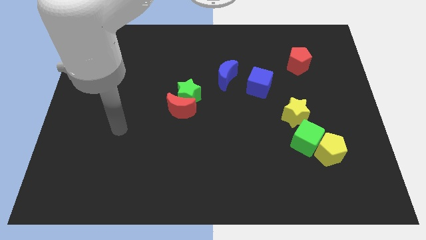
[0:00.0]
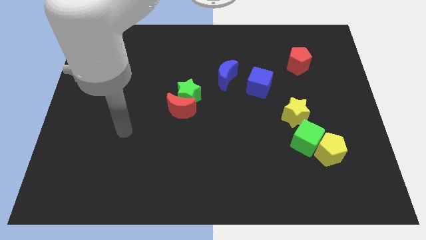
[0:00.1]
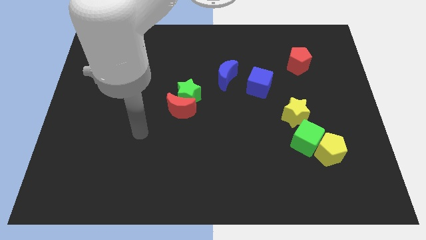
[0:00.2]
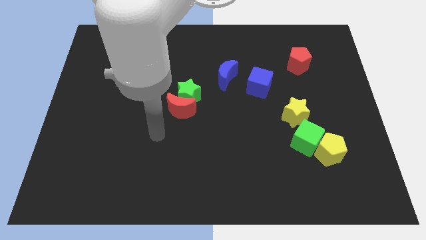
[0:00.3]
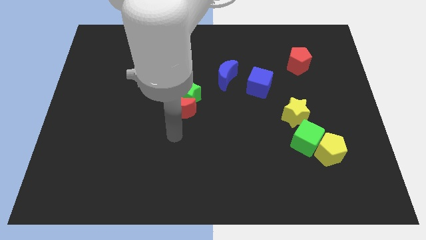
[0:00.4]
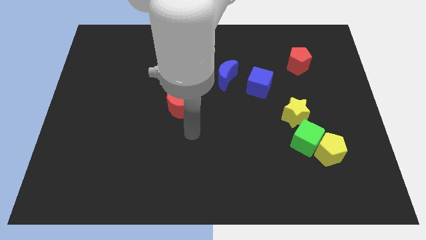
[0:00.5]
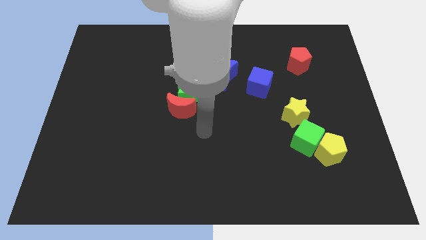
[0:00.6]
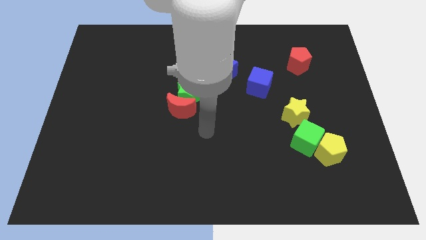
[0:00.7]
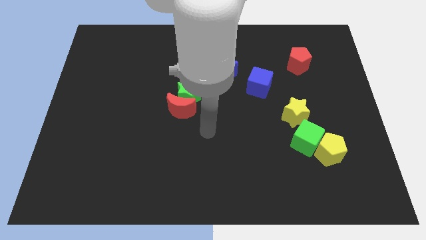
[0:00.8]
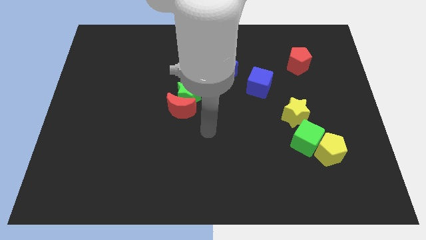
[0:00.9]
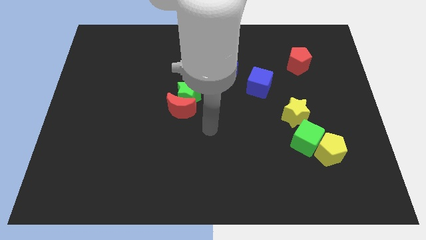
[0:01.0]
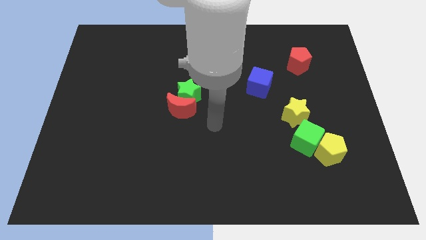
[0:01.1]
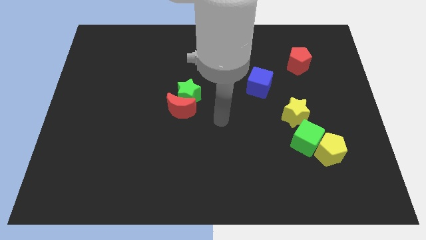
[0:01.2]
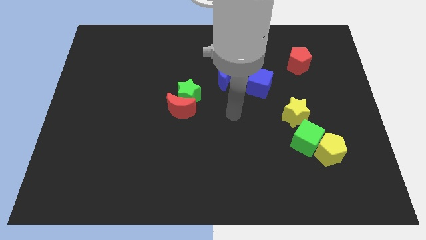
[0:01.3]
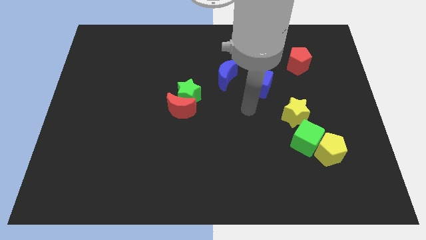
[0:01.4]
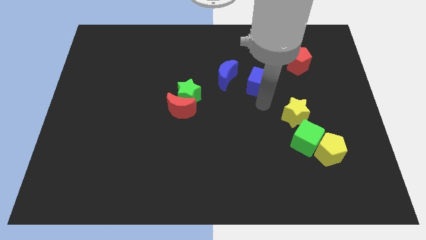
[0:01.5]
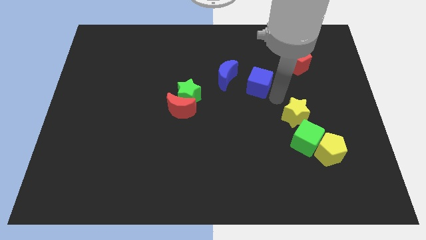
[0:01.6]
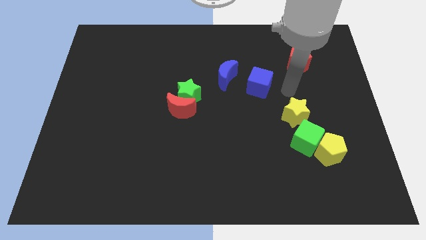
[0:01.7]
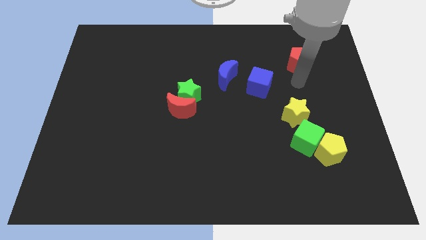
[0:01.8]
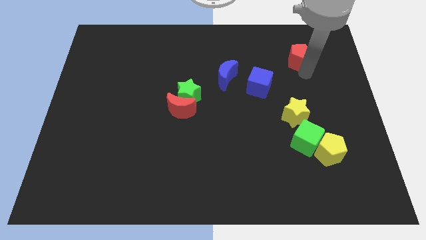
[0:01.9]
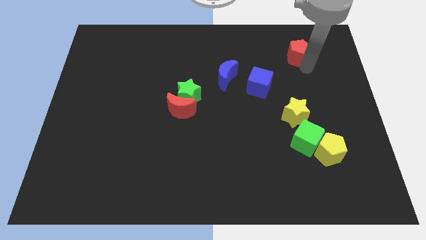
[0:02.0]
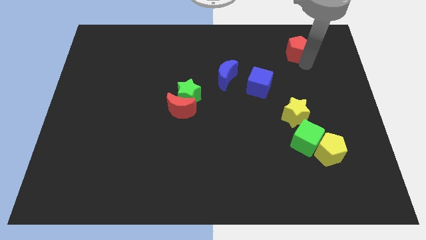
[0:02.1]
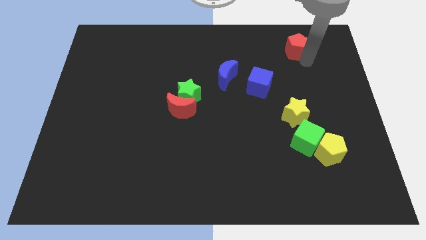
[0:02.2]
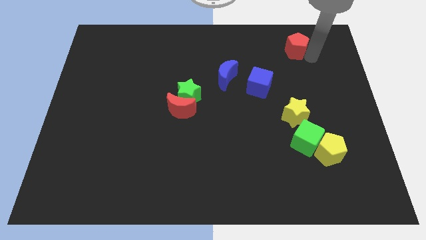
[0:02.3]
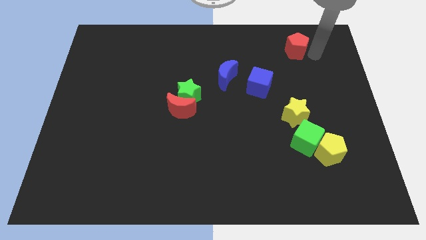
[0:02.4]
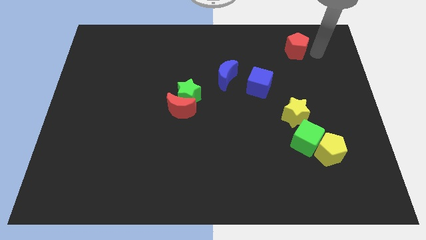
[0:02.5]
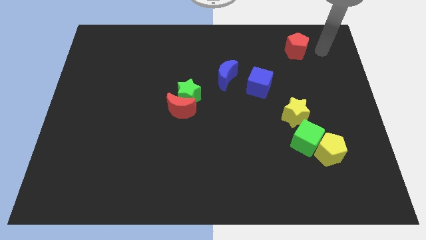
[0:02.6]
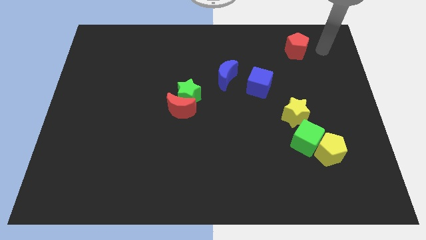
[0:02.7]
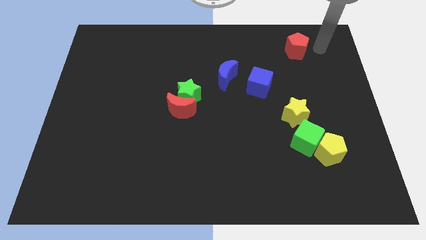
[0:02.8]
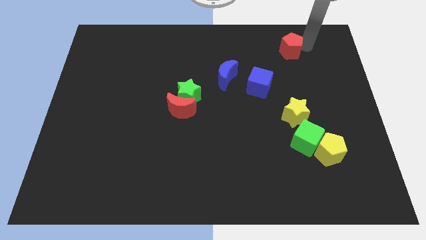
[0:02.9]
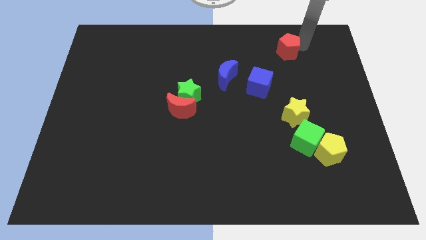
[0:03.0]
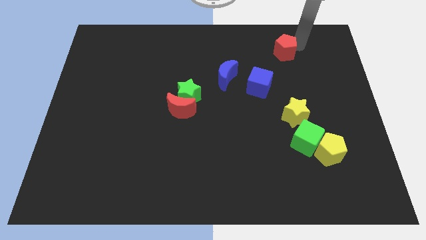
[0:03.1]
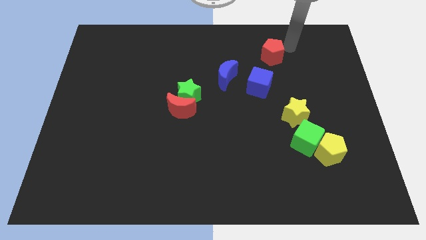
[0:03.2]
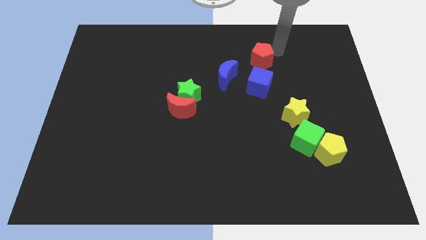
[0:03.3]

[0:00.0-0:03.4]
move the red pentagon to the top side of the blue cube

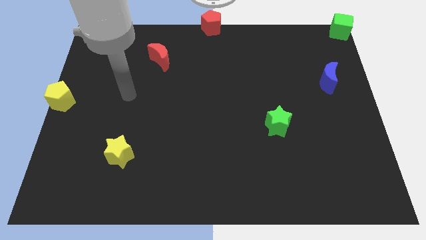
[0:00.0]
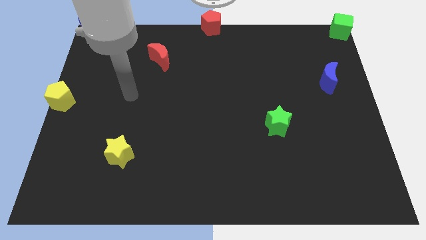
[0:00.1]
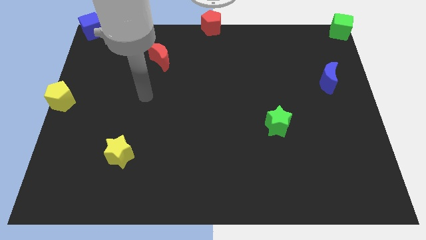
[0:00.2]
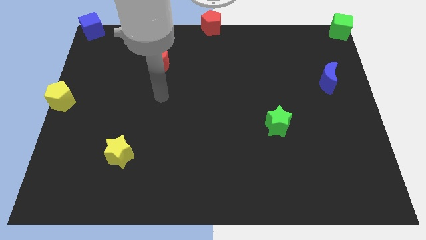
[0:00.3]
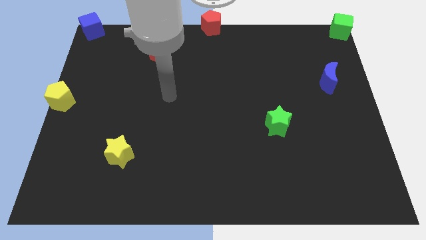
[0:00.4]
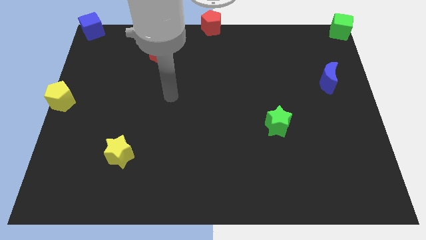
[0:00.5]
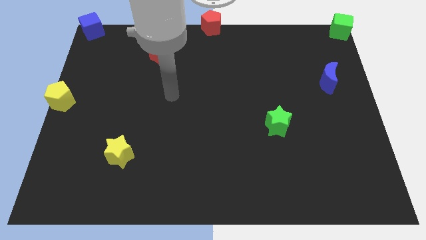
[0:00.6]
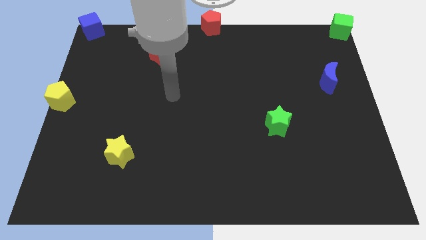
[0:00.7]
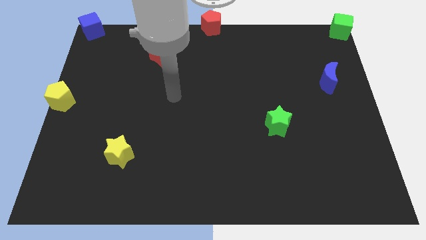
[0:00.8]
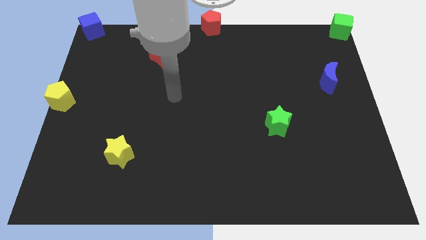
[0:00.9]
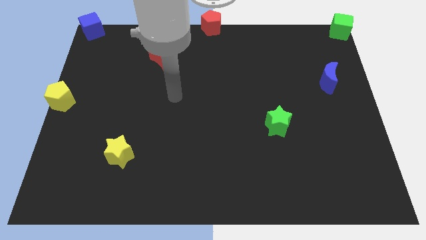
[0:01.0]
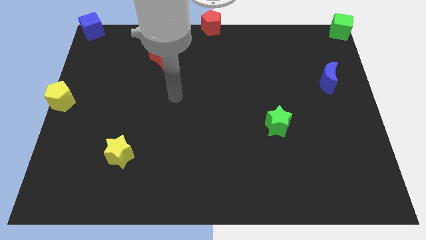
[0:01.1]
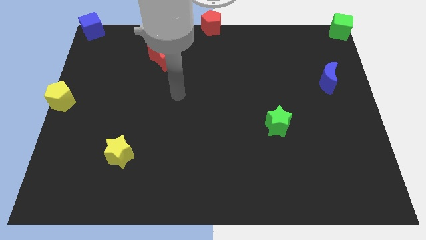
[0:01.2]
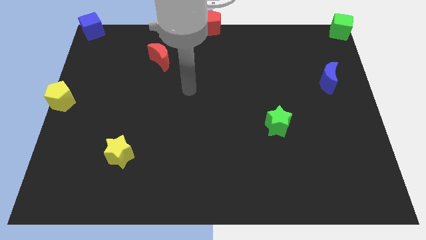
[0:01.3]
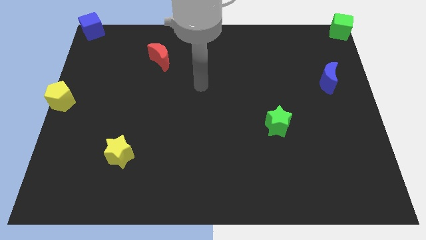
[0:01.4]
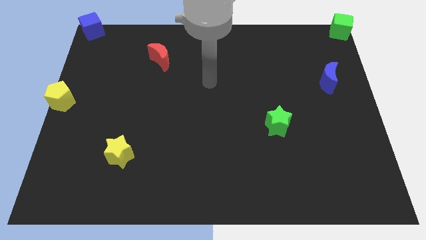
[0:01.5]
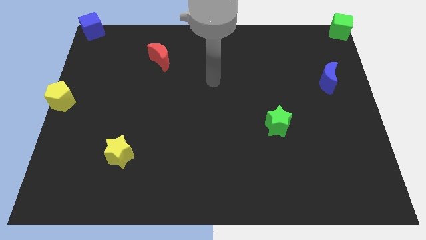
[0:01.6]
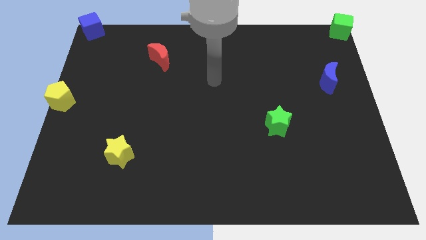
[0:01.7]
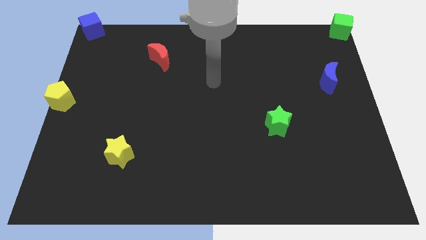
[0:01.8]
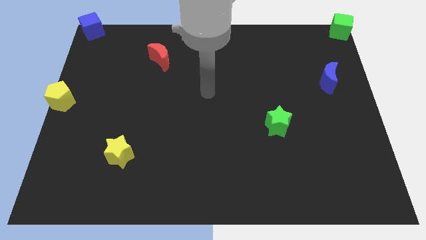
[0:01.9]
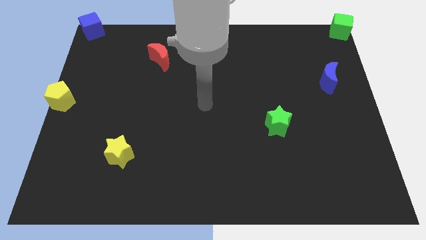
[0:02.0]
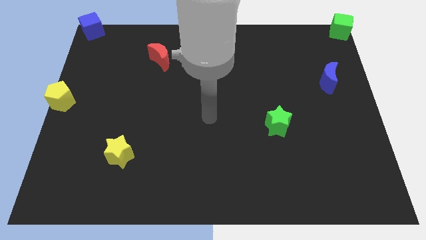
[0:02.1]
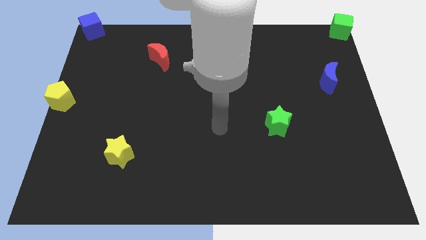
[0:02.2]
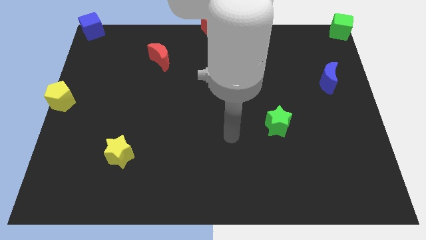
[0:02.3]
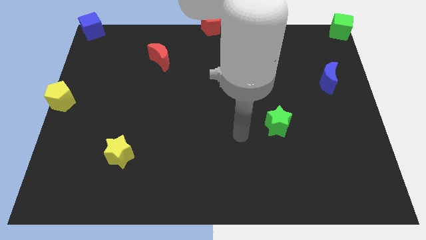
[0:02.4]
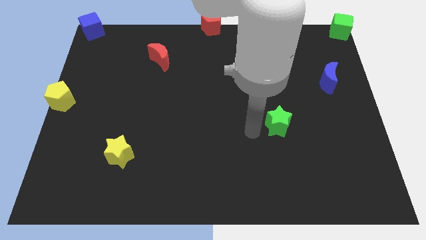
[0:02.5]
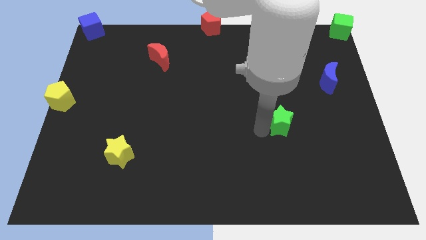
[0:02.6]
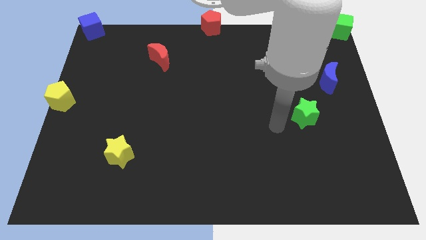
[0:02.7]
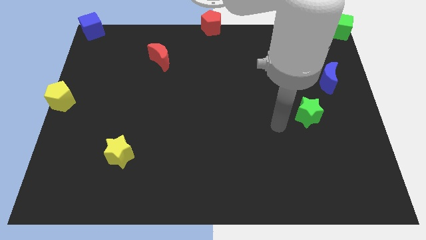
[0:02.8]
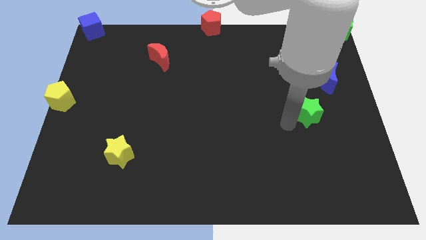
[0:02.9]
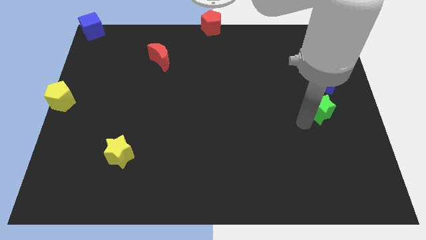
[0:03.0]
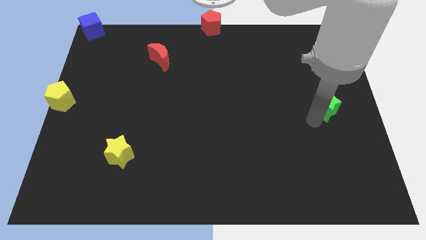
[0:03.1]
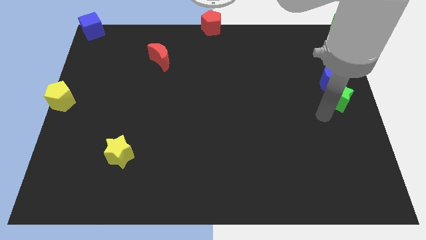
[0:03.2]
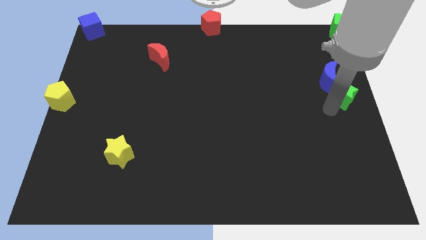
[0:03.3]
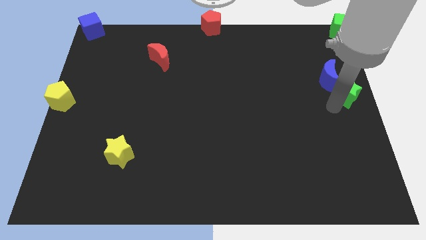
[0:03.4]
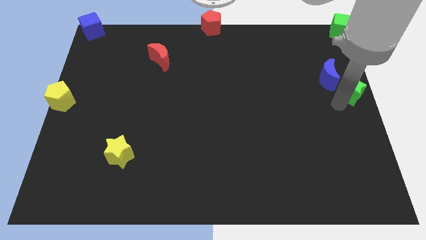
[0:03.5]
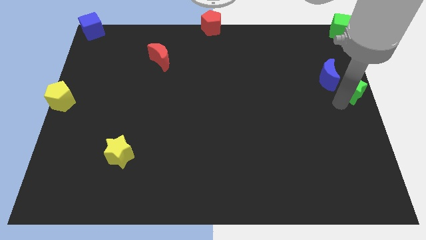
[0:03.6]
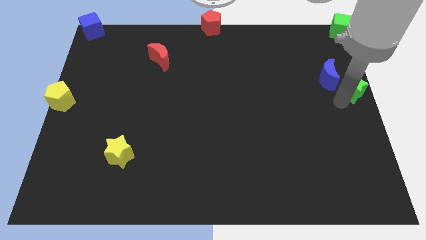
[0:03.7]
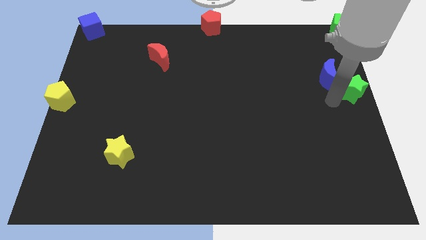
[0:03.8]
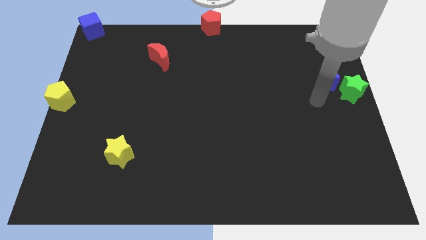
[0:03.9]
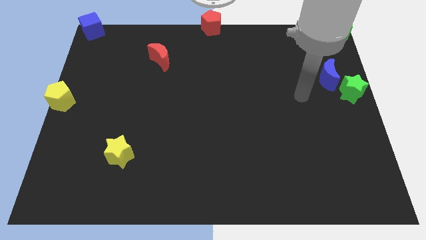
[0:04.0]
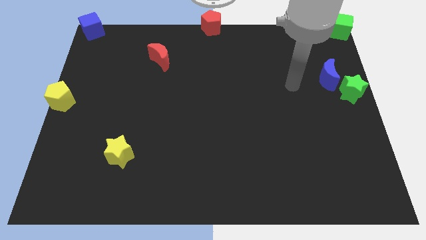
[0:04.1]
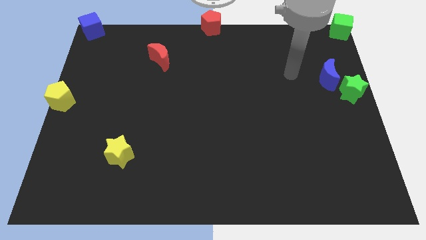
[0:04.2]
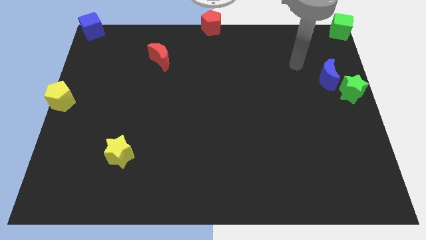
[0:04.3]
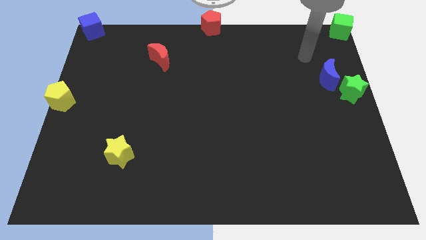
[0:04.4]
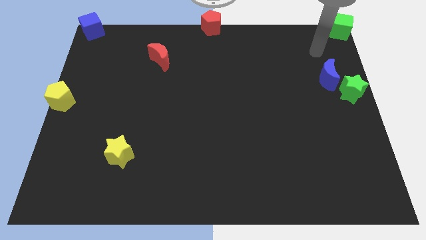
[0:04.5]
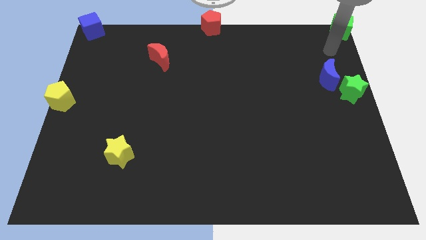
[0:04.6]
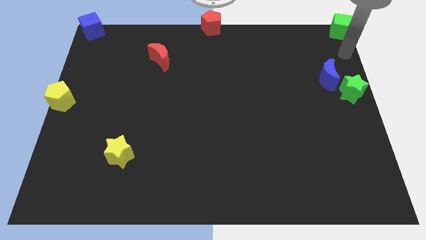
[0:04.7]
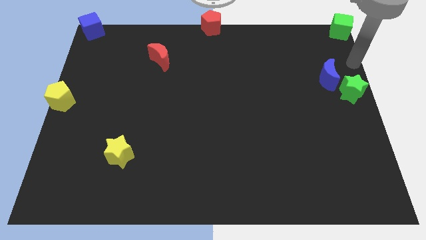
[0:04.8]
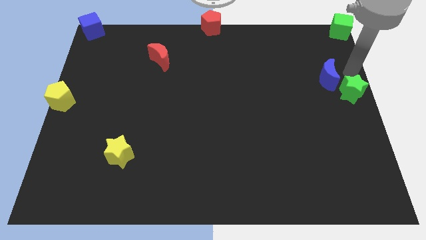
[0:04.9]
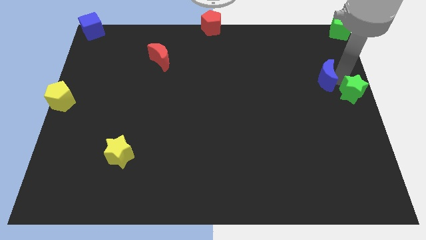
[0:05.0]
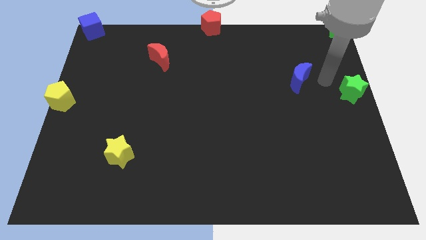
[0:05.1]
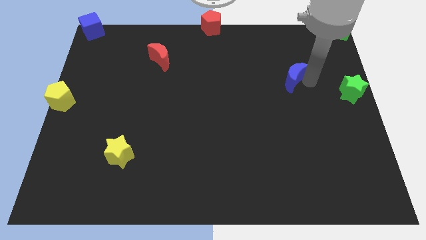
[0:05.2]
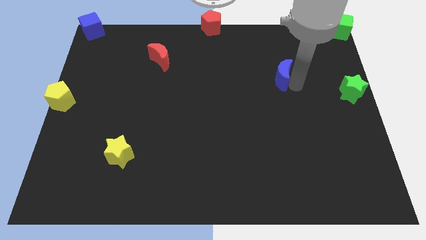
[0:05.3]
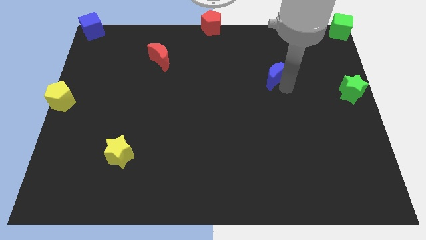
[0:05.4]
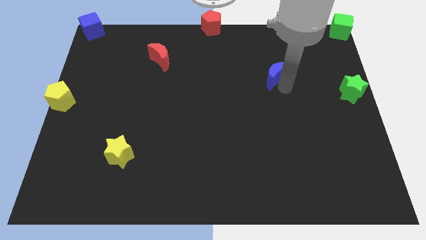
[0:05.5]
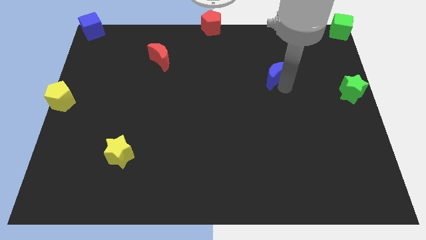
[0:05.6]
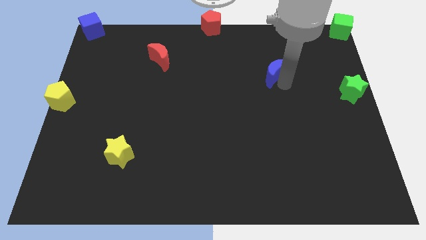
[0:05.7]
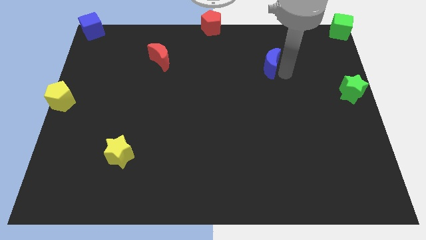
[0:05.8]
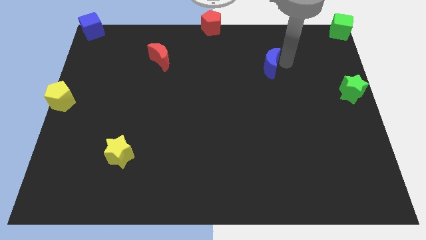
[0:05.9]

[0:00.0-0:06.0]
push the green star towards the right center of the board
